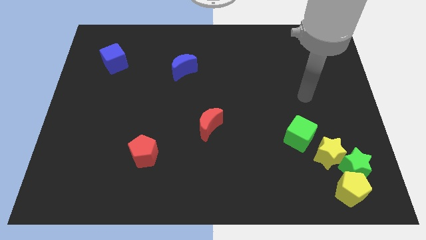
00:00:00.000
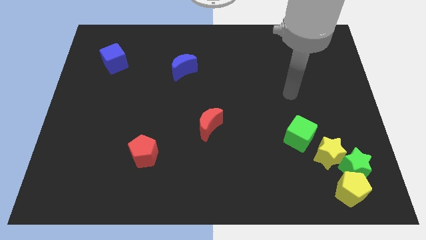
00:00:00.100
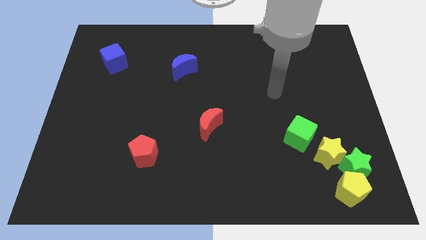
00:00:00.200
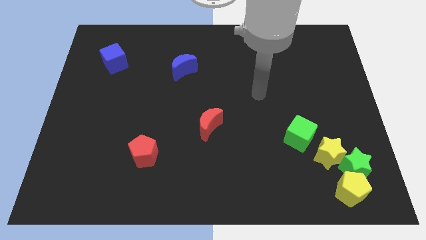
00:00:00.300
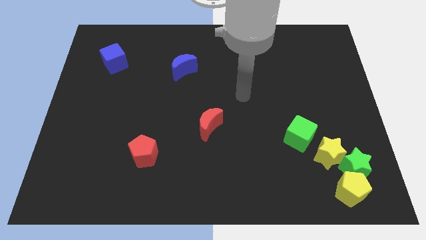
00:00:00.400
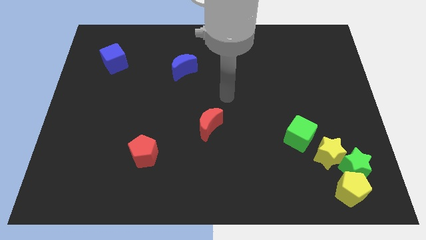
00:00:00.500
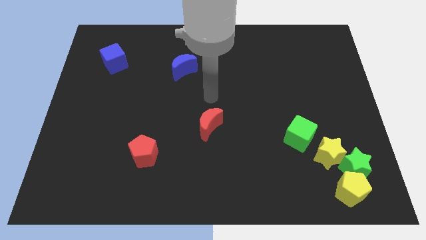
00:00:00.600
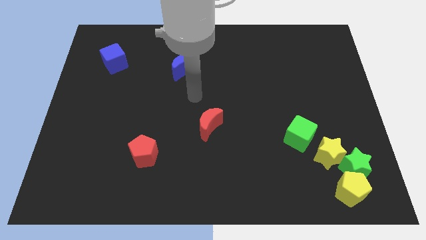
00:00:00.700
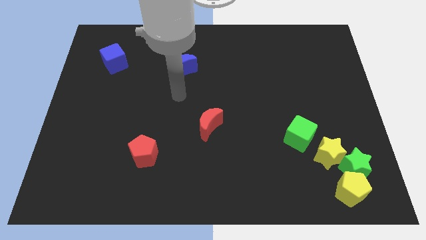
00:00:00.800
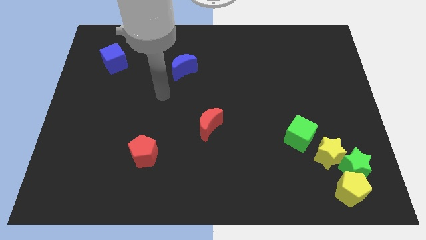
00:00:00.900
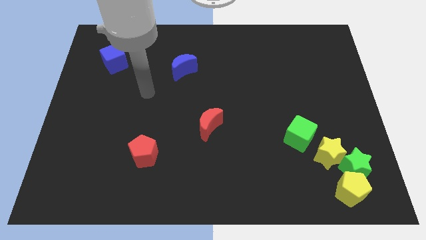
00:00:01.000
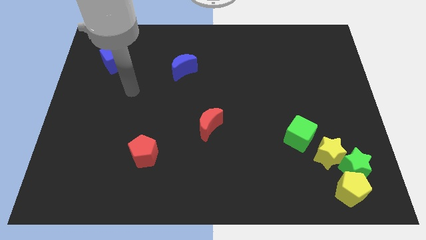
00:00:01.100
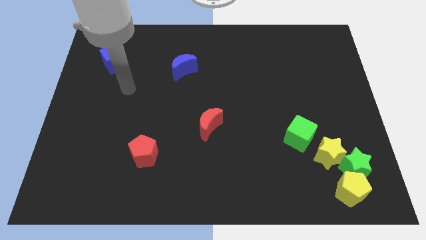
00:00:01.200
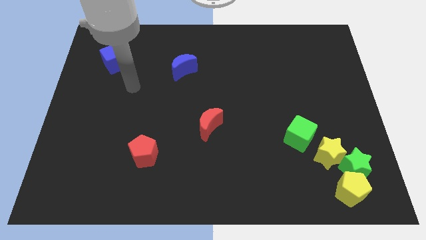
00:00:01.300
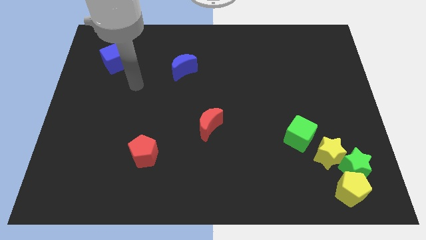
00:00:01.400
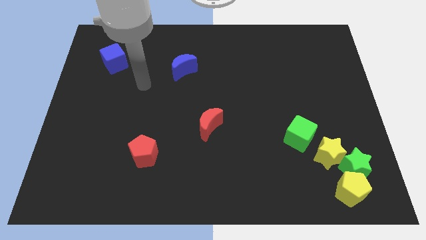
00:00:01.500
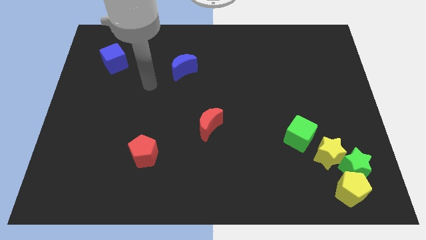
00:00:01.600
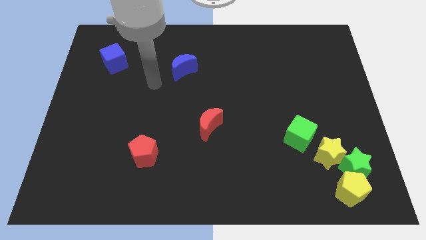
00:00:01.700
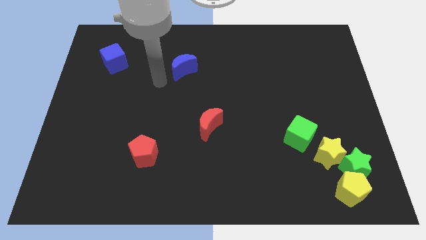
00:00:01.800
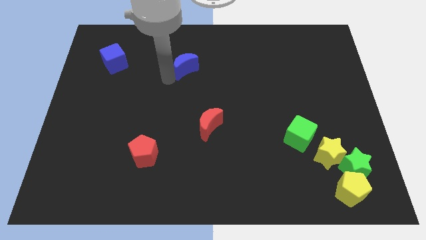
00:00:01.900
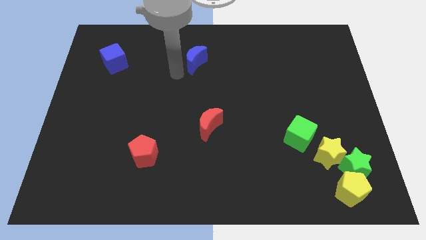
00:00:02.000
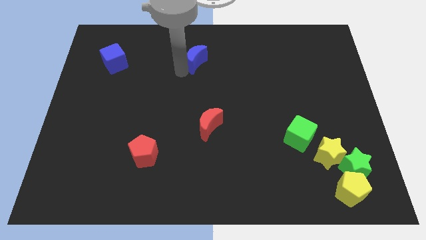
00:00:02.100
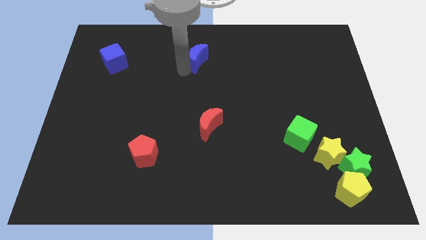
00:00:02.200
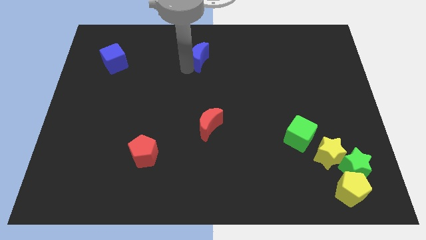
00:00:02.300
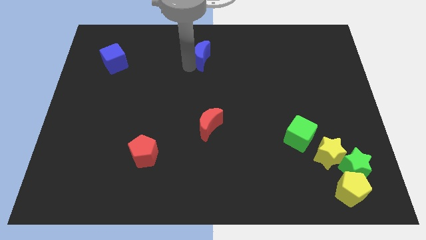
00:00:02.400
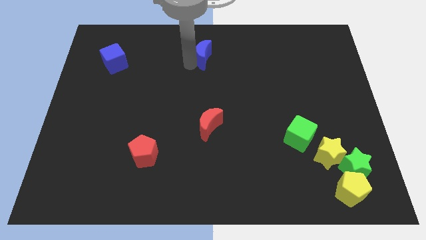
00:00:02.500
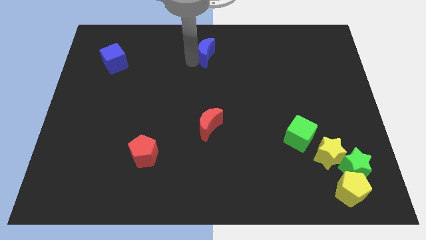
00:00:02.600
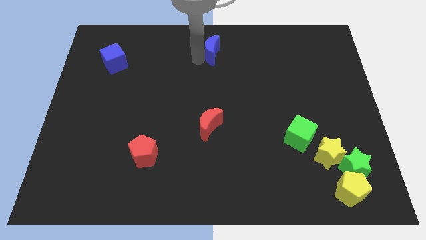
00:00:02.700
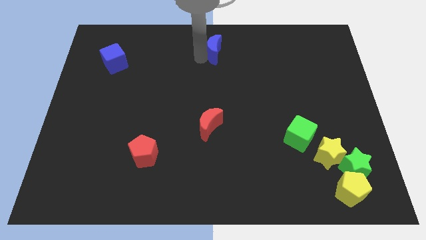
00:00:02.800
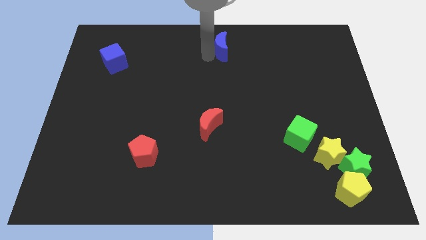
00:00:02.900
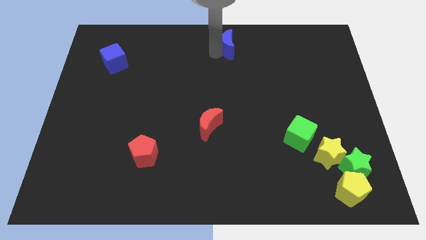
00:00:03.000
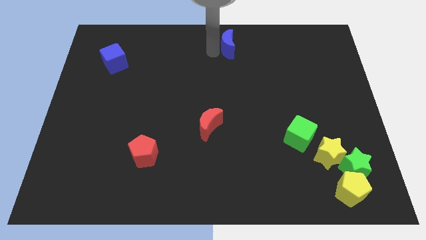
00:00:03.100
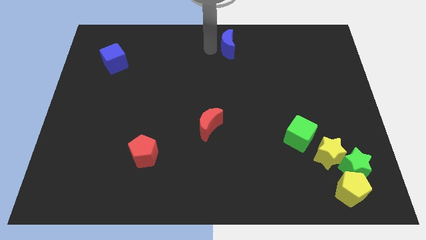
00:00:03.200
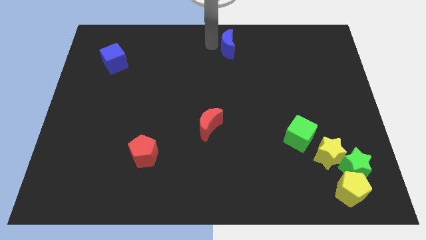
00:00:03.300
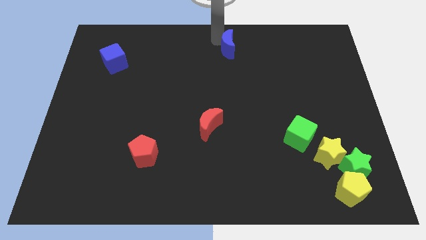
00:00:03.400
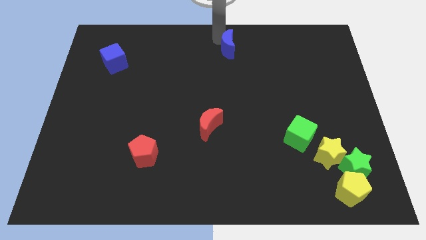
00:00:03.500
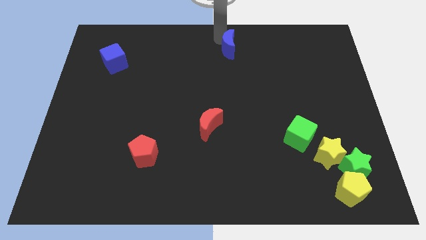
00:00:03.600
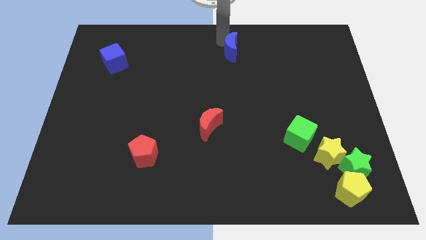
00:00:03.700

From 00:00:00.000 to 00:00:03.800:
place the blue moon to the top center of the board

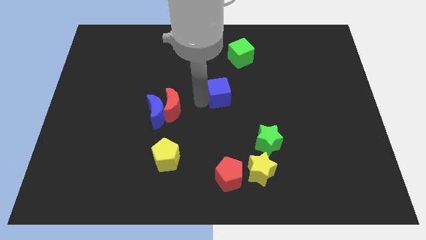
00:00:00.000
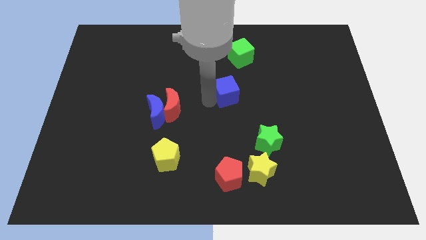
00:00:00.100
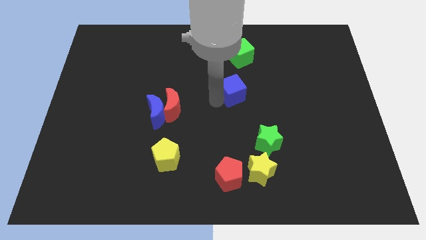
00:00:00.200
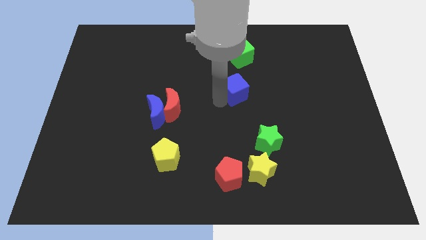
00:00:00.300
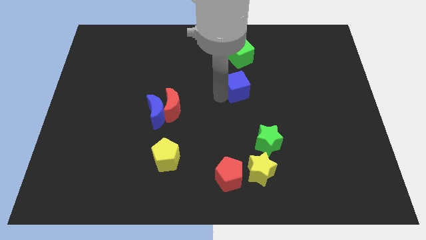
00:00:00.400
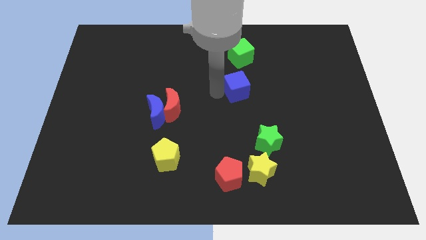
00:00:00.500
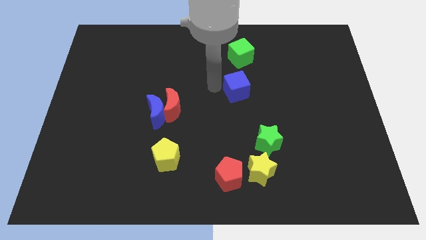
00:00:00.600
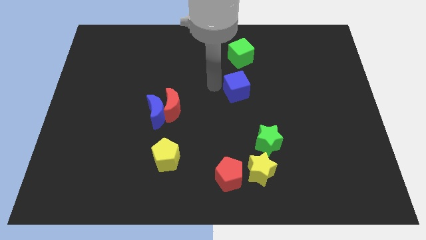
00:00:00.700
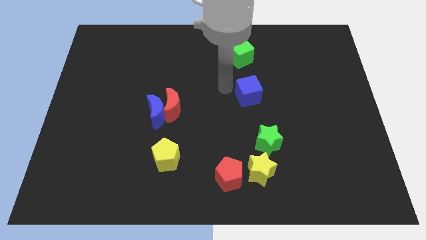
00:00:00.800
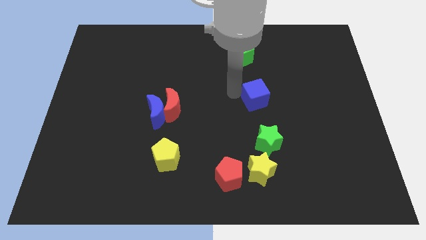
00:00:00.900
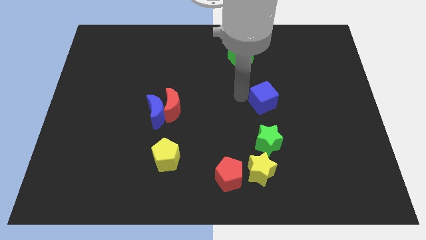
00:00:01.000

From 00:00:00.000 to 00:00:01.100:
place the blue cube above the green star

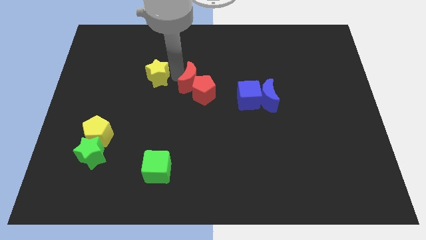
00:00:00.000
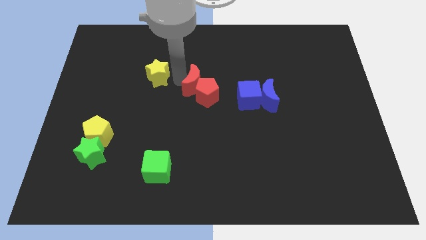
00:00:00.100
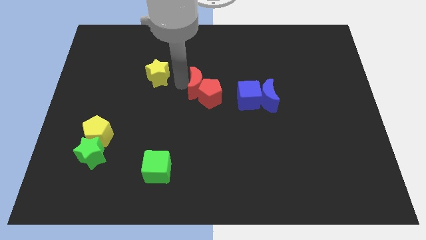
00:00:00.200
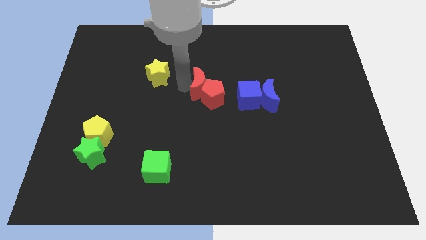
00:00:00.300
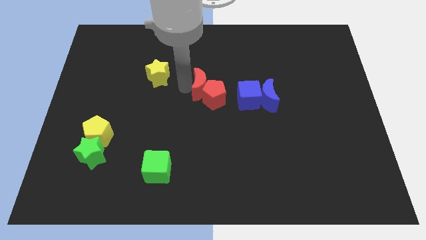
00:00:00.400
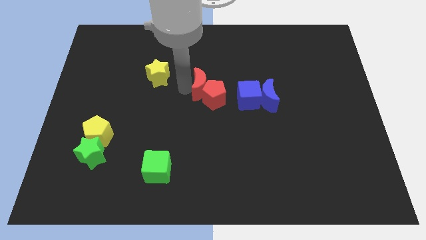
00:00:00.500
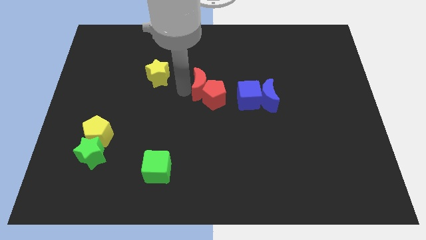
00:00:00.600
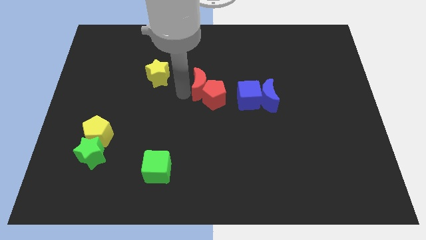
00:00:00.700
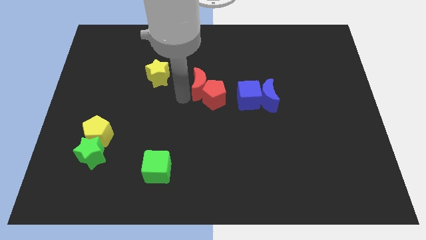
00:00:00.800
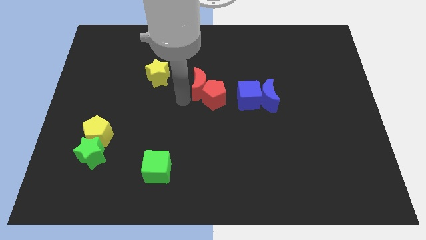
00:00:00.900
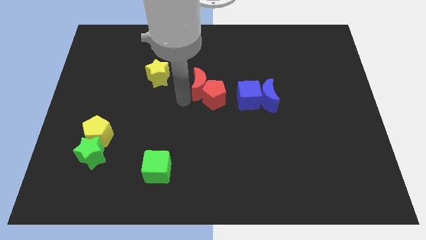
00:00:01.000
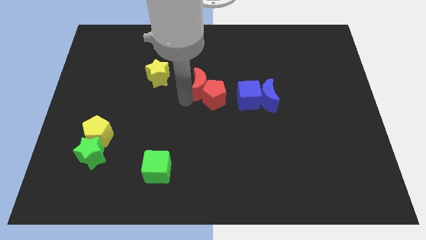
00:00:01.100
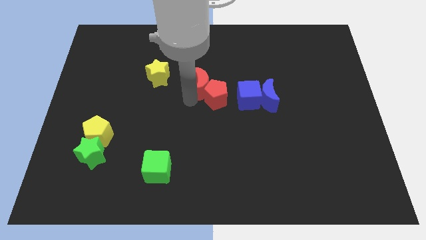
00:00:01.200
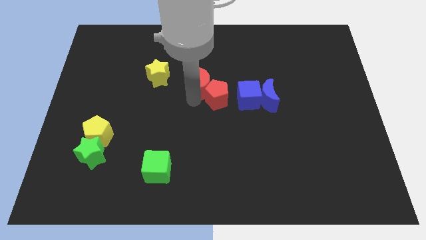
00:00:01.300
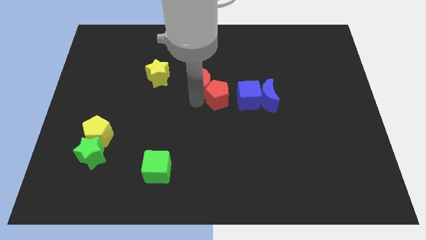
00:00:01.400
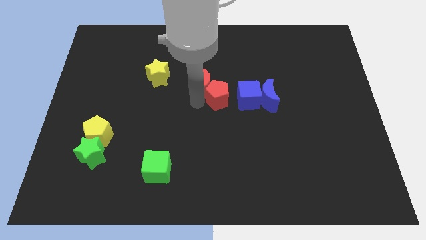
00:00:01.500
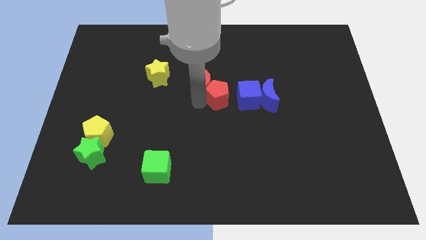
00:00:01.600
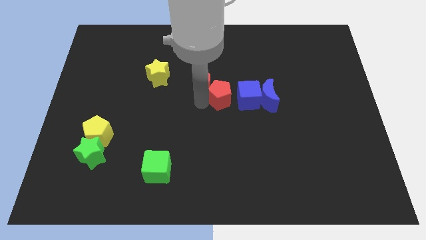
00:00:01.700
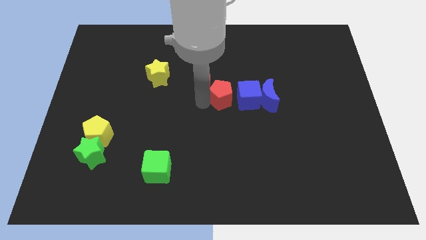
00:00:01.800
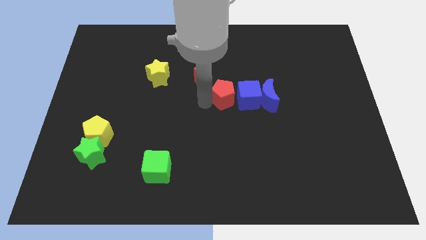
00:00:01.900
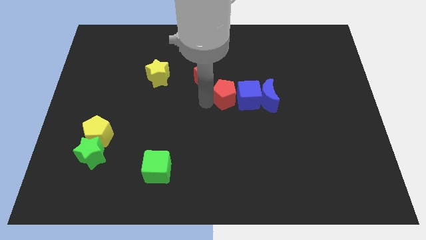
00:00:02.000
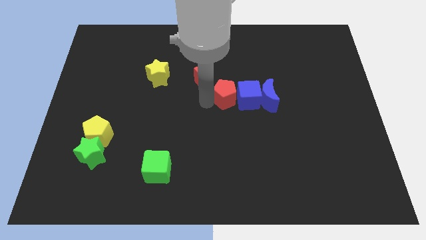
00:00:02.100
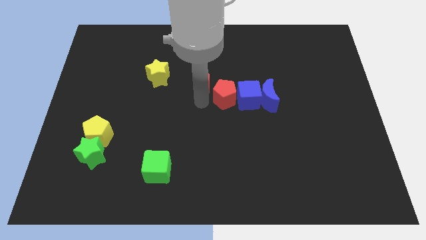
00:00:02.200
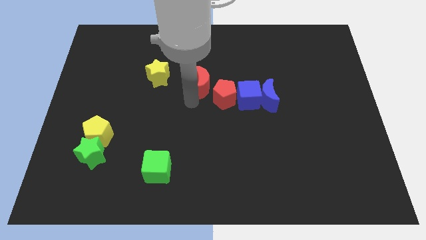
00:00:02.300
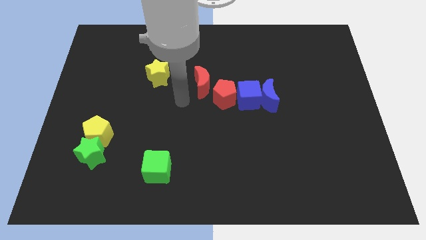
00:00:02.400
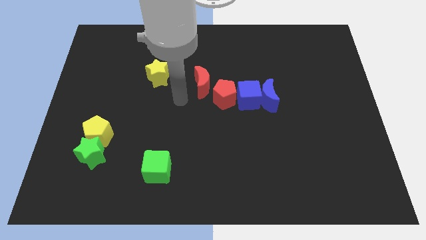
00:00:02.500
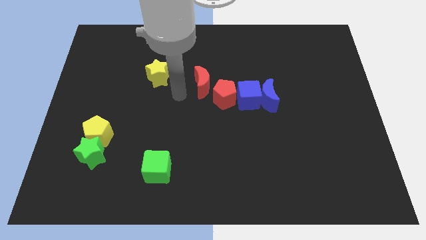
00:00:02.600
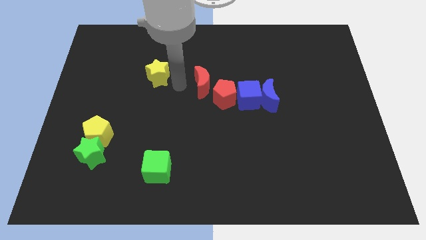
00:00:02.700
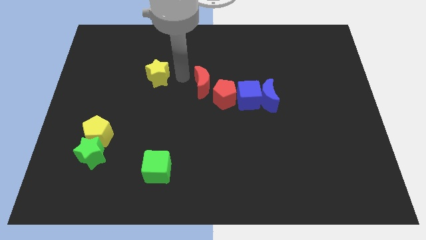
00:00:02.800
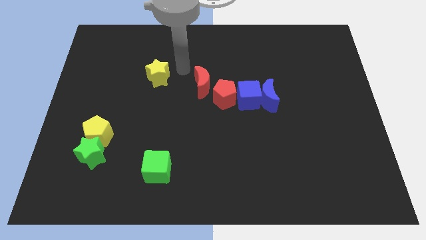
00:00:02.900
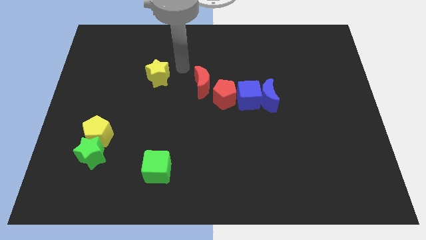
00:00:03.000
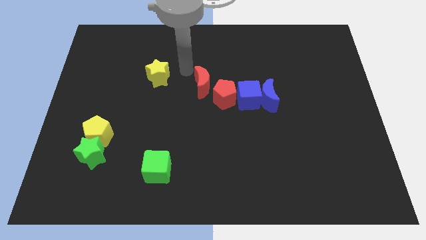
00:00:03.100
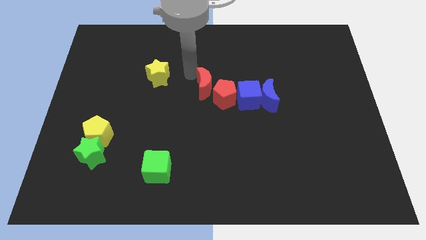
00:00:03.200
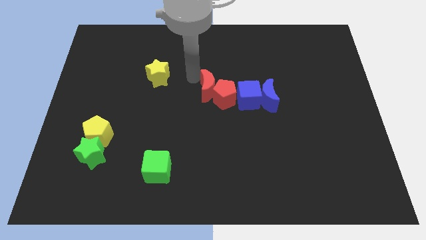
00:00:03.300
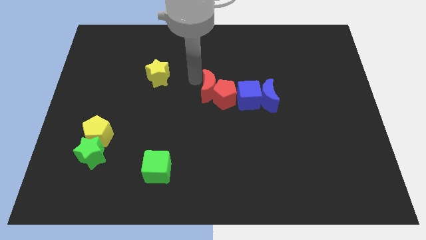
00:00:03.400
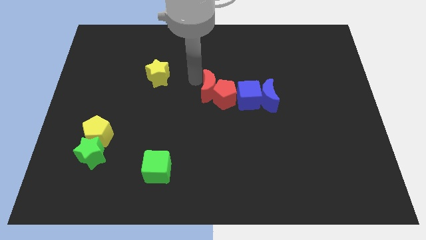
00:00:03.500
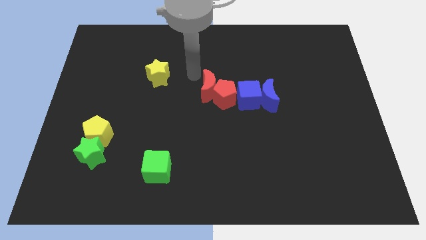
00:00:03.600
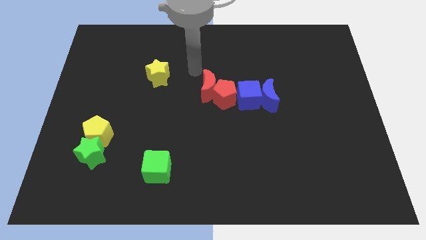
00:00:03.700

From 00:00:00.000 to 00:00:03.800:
push the red crescent along with red pentagon left to the blue cube

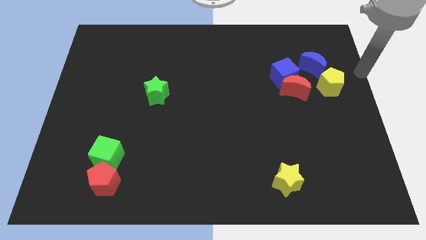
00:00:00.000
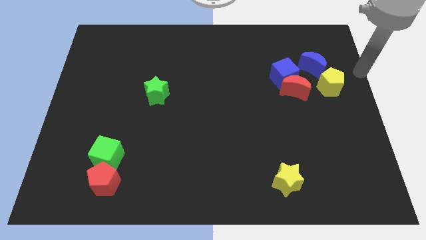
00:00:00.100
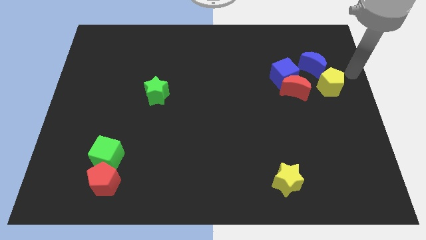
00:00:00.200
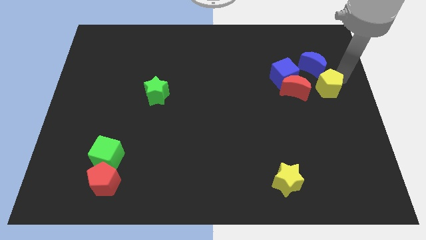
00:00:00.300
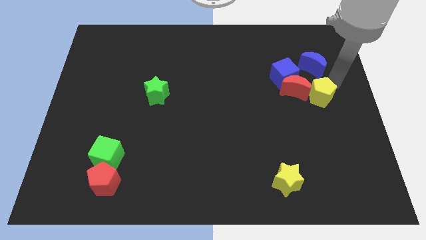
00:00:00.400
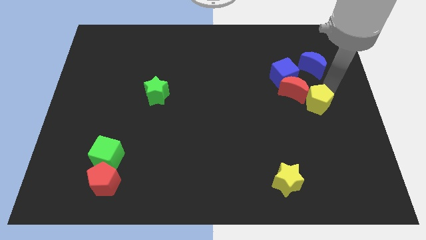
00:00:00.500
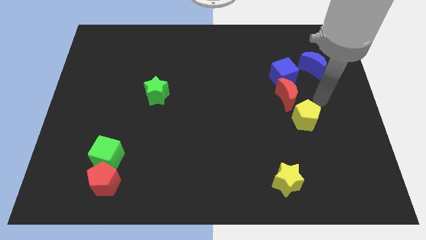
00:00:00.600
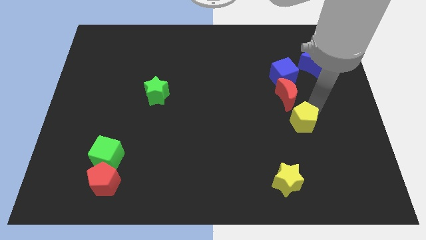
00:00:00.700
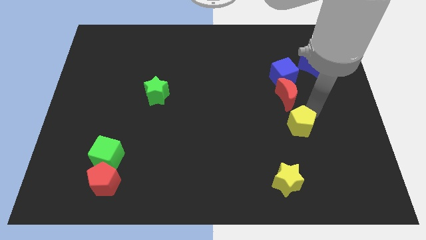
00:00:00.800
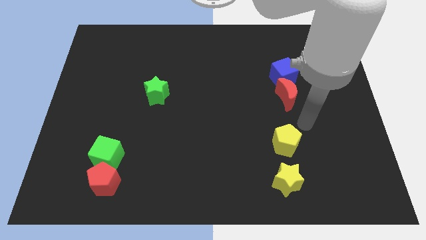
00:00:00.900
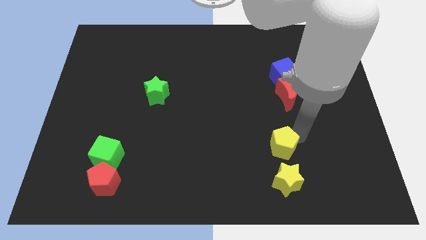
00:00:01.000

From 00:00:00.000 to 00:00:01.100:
separate yellow pentagon from blue moon
